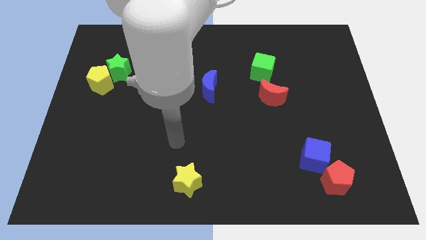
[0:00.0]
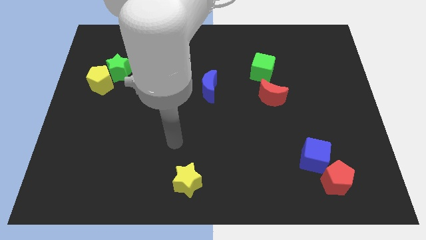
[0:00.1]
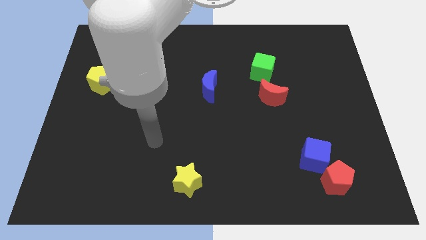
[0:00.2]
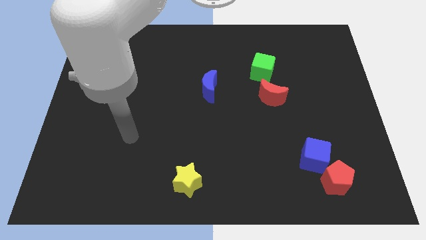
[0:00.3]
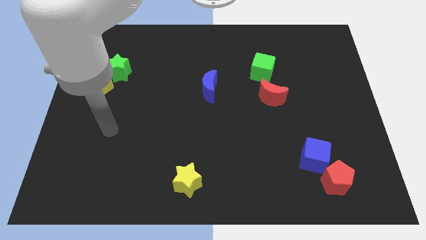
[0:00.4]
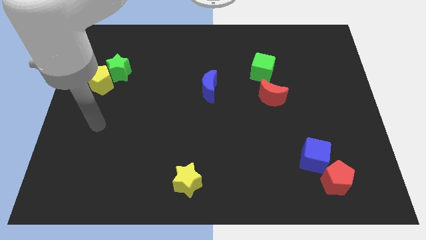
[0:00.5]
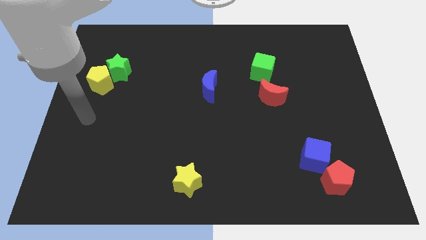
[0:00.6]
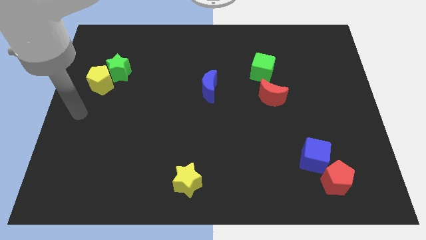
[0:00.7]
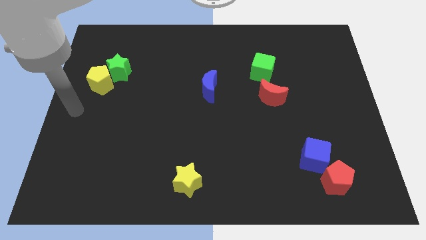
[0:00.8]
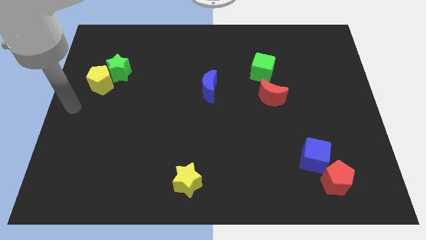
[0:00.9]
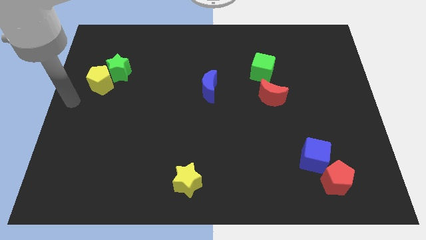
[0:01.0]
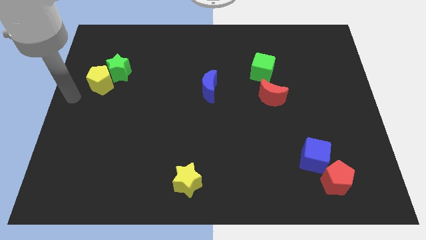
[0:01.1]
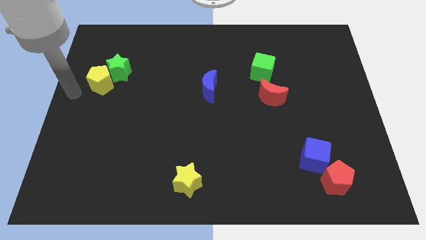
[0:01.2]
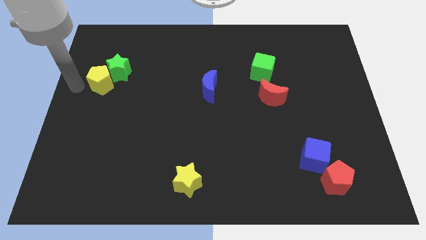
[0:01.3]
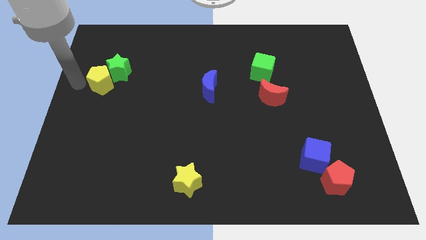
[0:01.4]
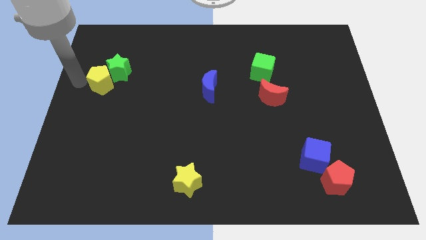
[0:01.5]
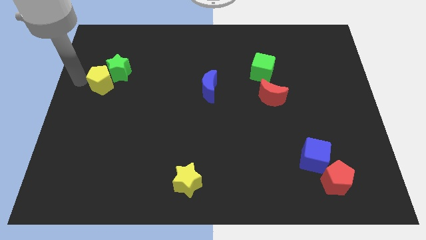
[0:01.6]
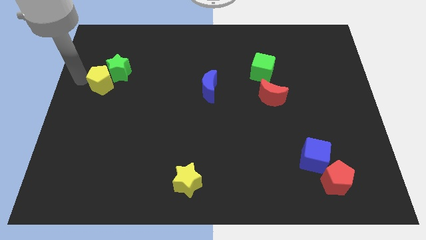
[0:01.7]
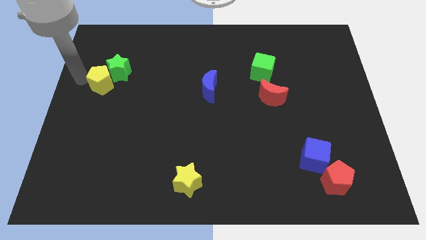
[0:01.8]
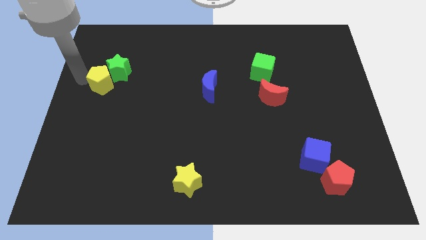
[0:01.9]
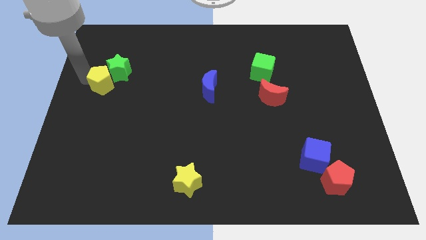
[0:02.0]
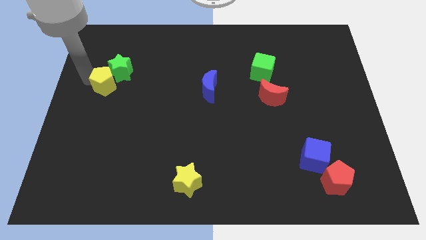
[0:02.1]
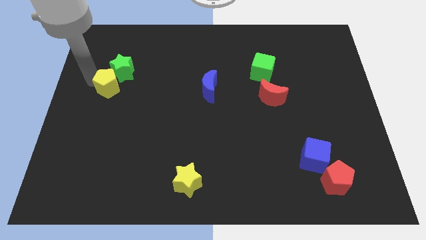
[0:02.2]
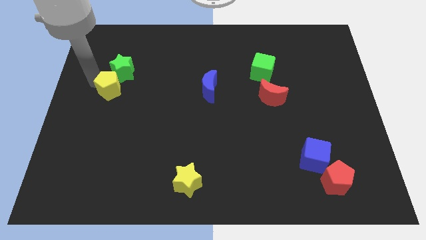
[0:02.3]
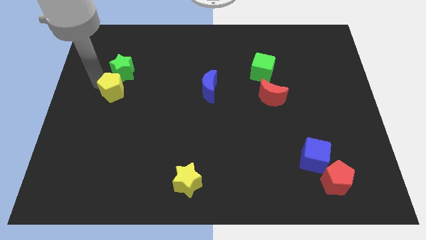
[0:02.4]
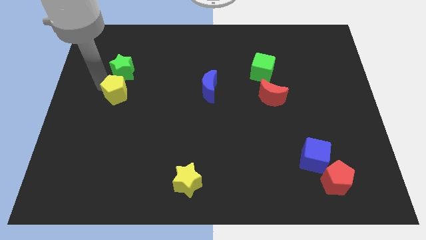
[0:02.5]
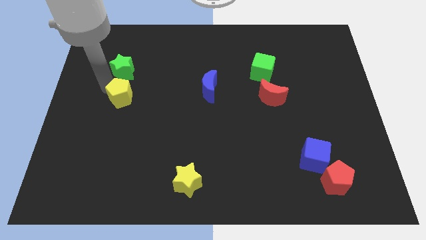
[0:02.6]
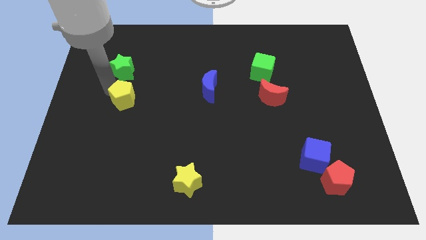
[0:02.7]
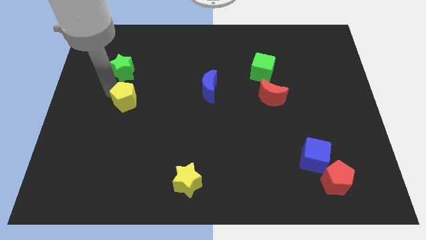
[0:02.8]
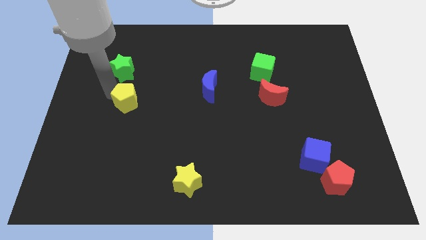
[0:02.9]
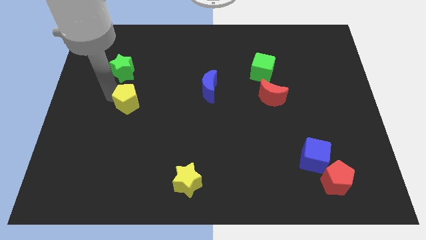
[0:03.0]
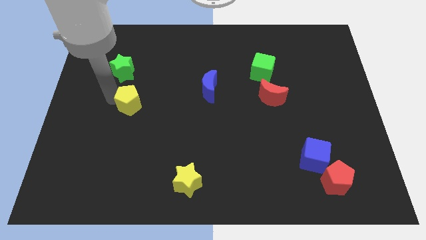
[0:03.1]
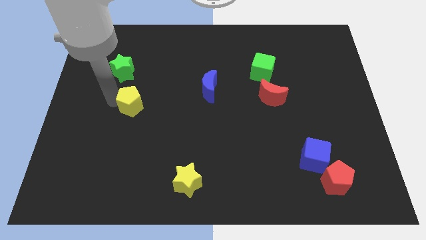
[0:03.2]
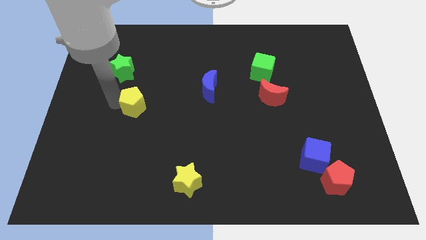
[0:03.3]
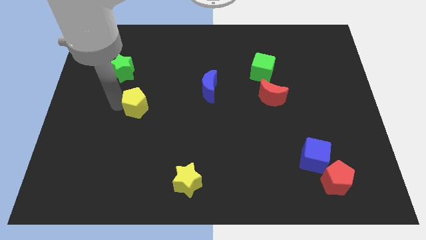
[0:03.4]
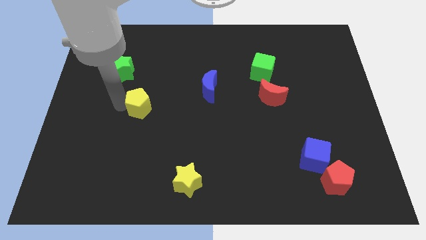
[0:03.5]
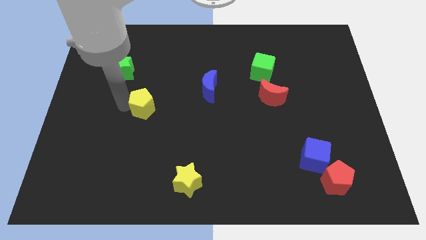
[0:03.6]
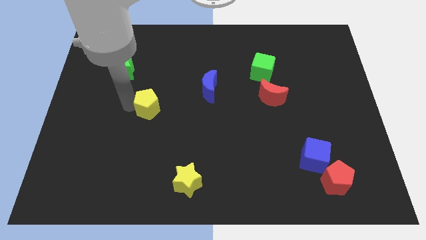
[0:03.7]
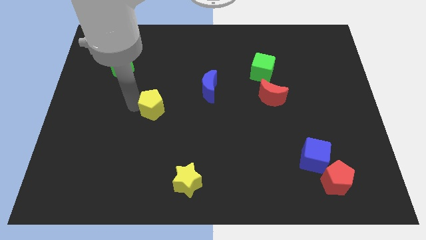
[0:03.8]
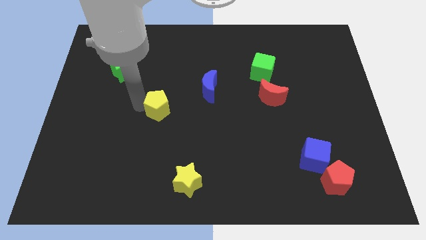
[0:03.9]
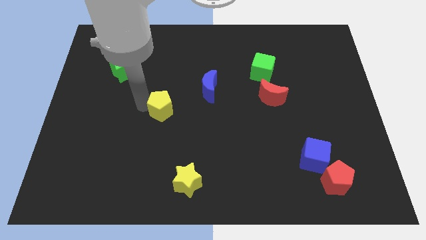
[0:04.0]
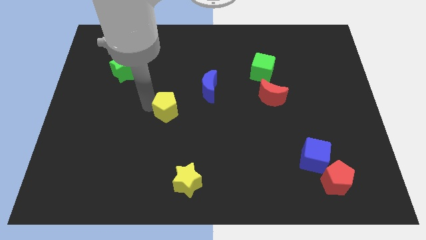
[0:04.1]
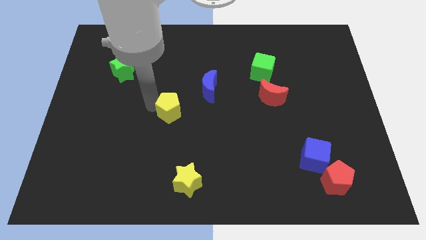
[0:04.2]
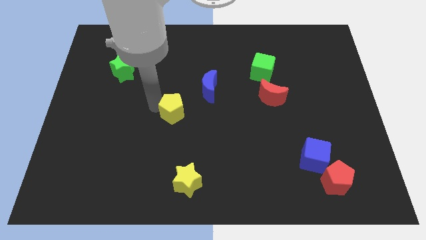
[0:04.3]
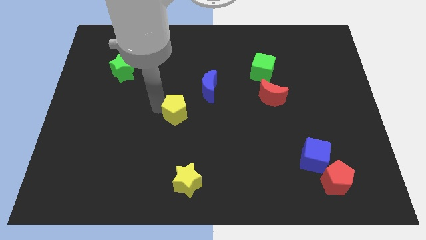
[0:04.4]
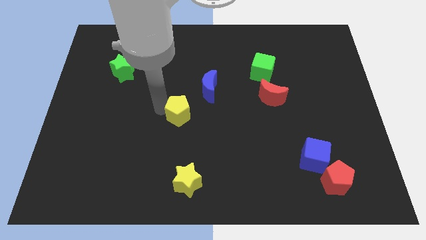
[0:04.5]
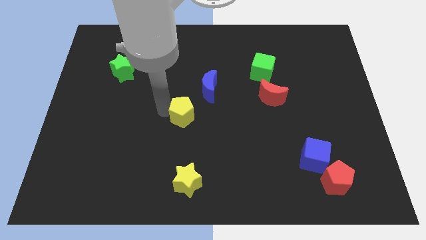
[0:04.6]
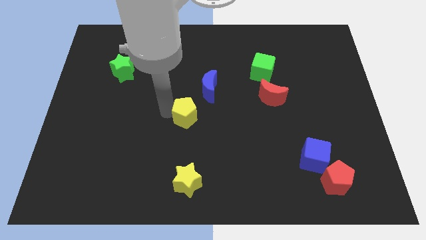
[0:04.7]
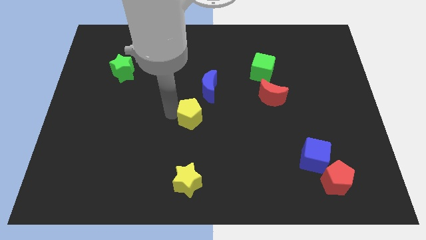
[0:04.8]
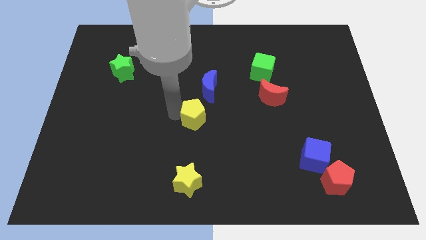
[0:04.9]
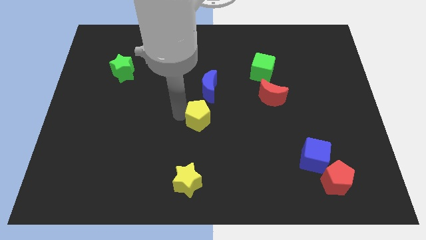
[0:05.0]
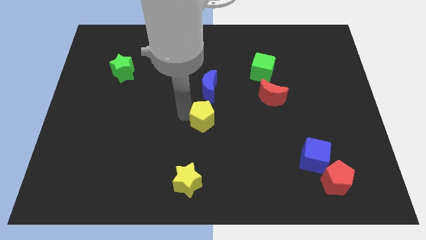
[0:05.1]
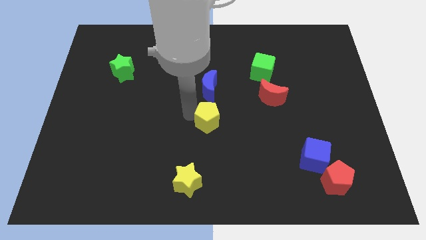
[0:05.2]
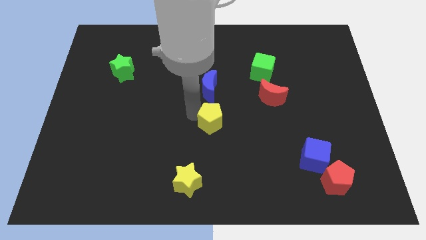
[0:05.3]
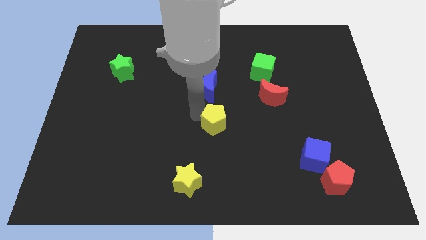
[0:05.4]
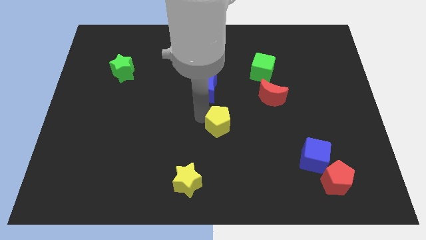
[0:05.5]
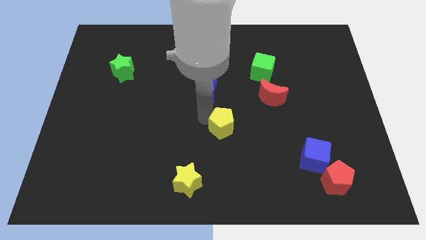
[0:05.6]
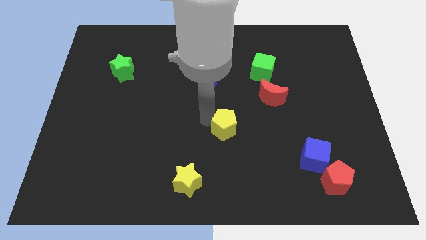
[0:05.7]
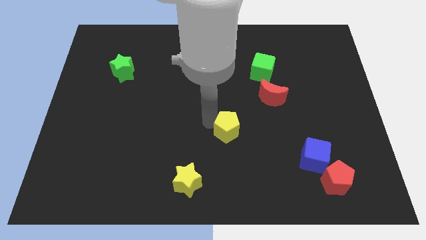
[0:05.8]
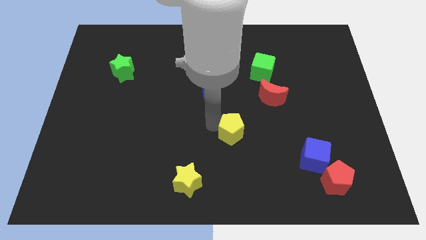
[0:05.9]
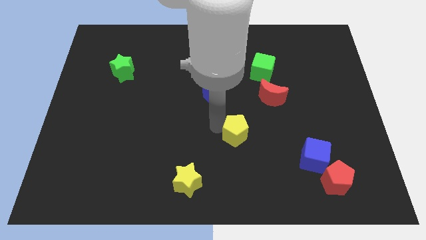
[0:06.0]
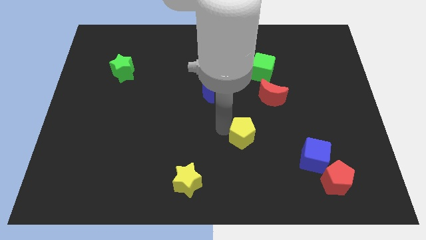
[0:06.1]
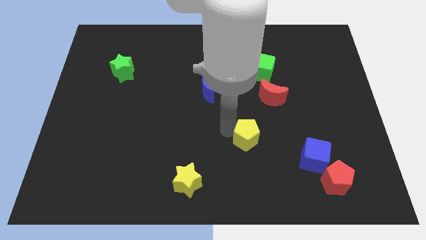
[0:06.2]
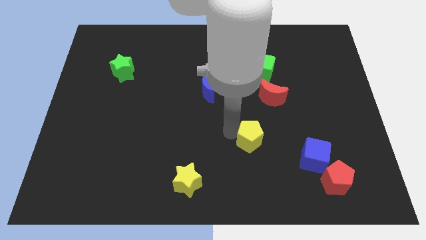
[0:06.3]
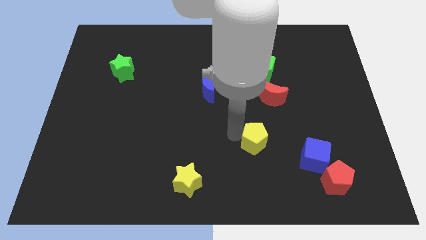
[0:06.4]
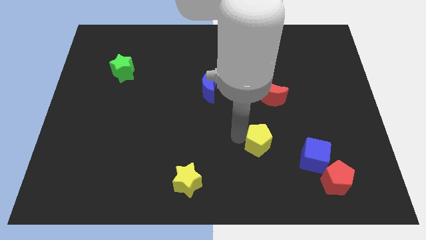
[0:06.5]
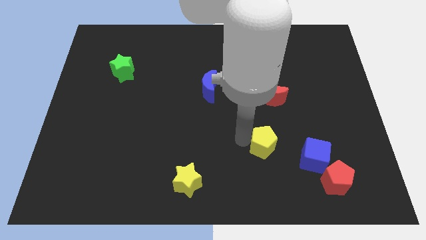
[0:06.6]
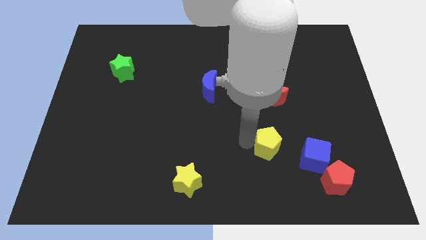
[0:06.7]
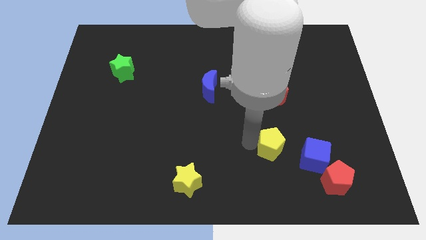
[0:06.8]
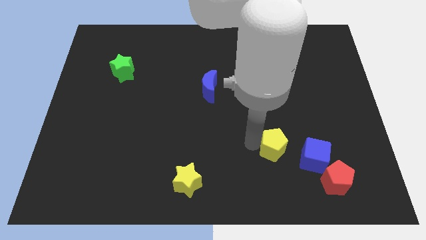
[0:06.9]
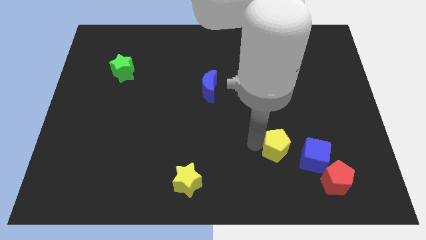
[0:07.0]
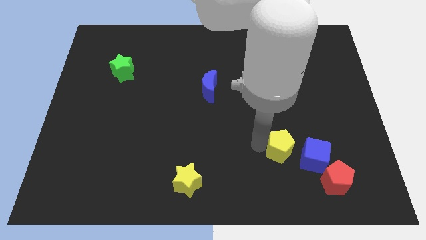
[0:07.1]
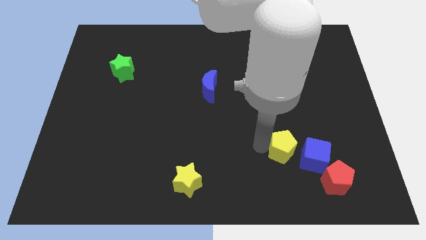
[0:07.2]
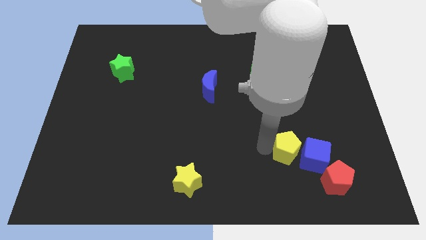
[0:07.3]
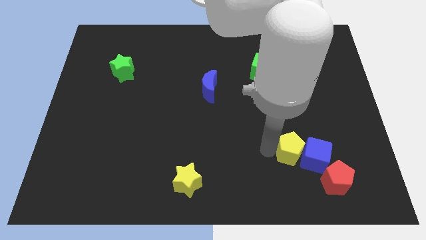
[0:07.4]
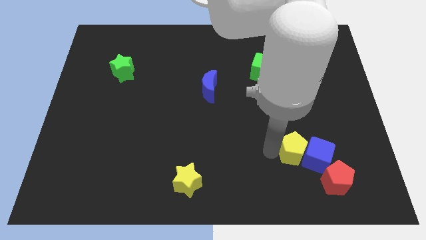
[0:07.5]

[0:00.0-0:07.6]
put the yellow pentagon towards the blue cube

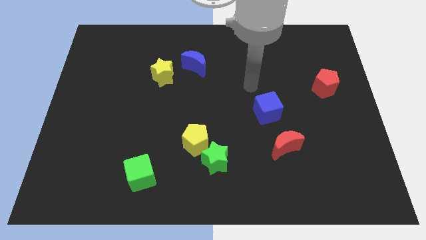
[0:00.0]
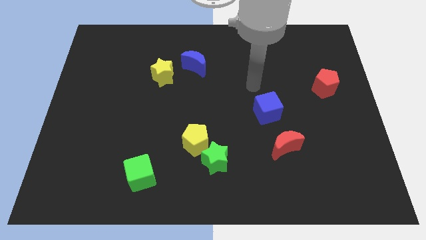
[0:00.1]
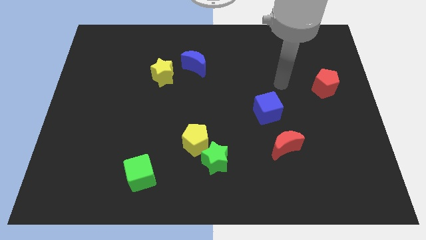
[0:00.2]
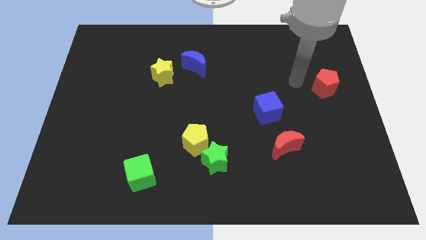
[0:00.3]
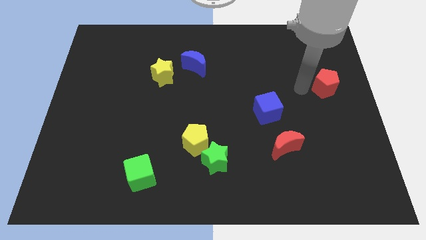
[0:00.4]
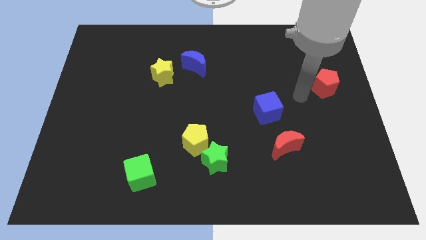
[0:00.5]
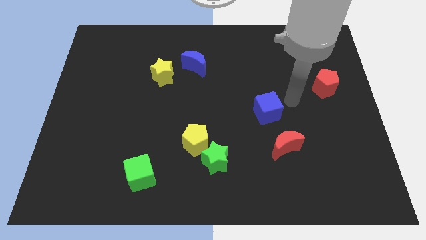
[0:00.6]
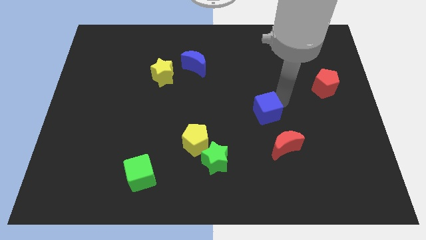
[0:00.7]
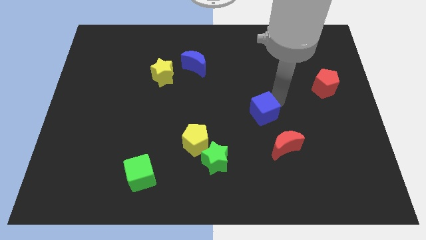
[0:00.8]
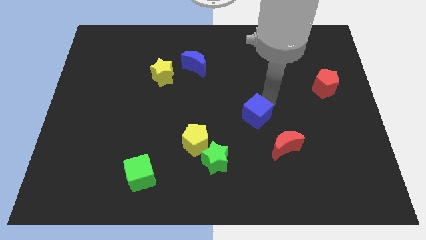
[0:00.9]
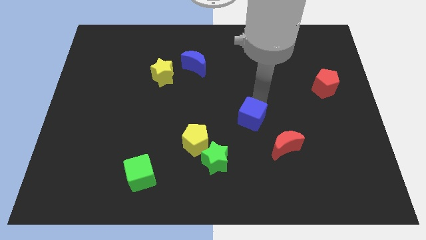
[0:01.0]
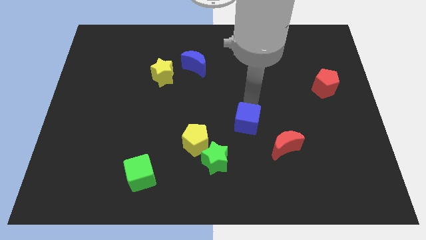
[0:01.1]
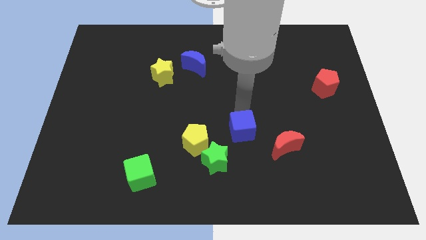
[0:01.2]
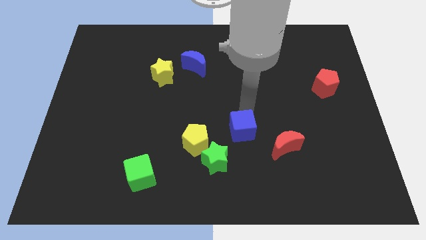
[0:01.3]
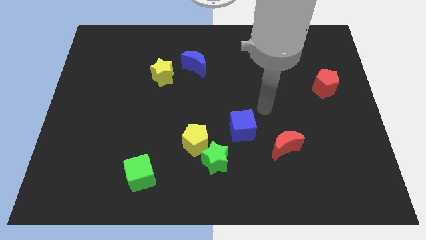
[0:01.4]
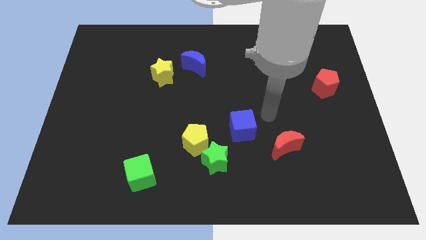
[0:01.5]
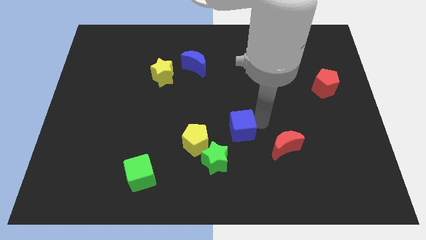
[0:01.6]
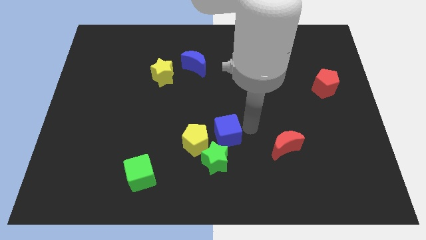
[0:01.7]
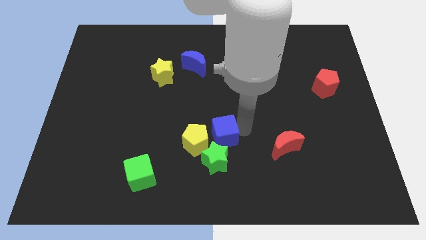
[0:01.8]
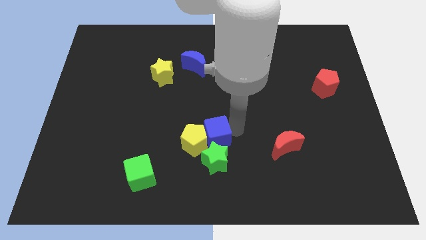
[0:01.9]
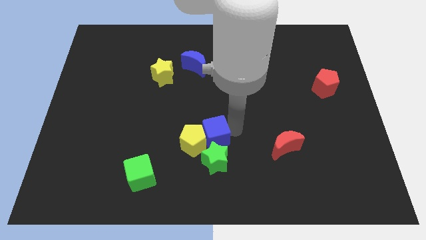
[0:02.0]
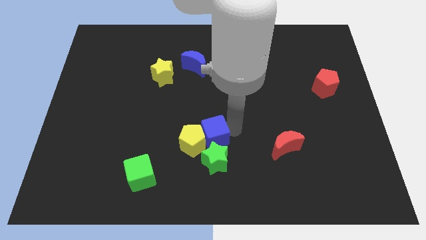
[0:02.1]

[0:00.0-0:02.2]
move the blue cube to the yellow pentagon
